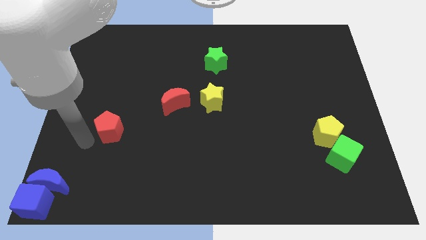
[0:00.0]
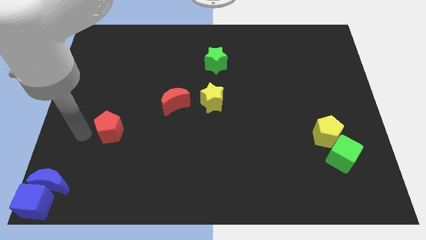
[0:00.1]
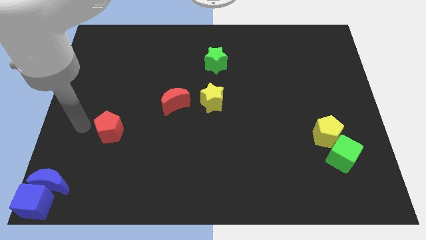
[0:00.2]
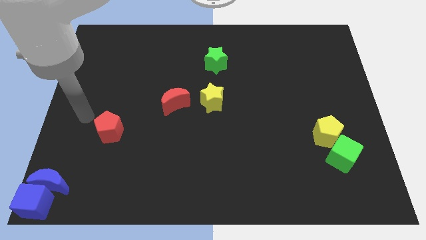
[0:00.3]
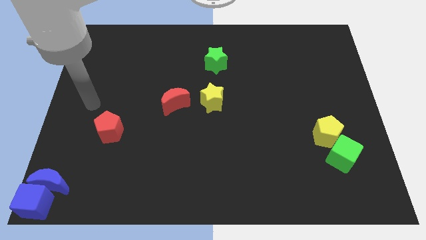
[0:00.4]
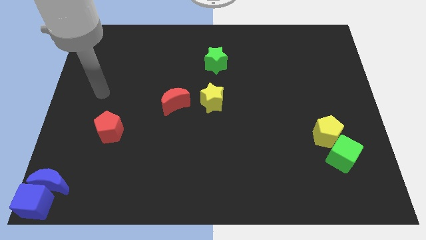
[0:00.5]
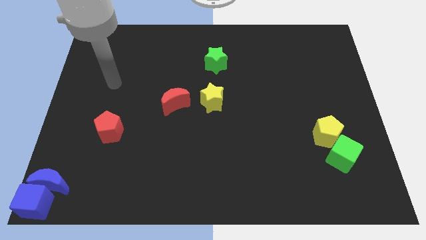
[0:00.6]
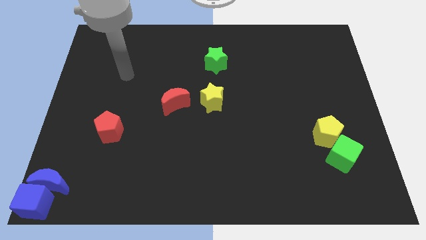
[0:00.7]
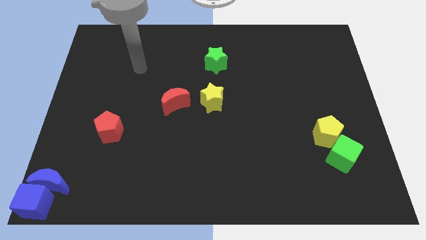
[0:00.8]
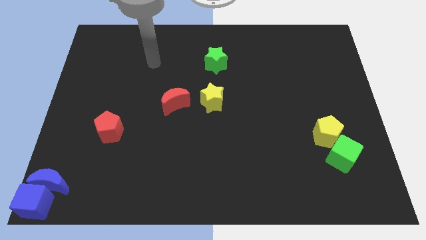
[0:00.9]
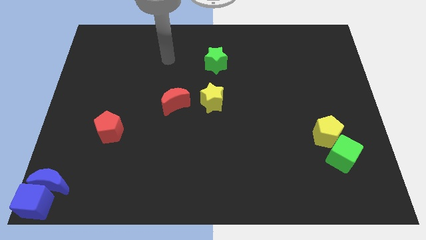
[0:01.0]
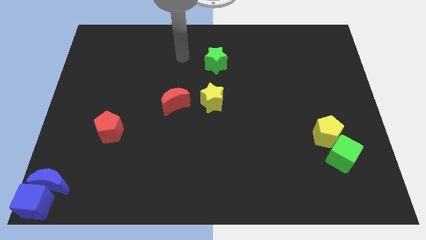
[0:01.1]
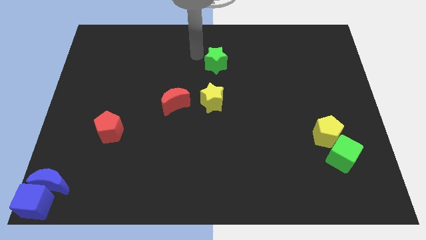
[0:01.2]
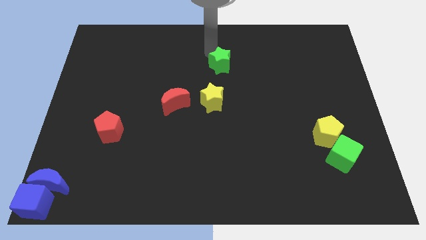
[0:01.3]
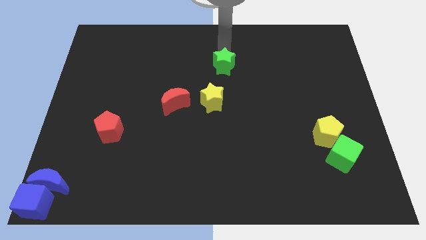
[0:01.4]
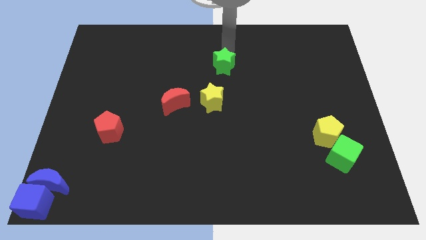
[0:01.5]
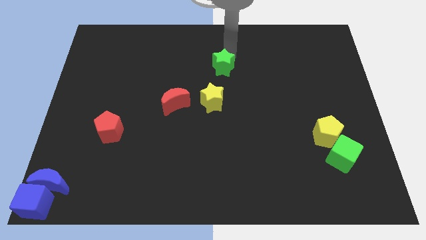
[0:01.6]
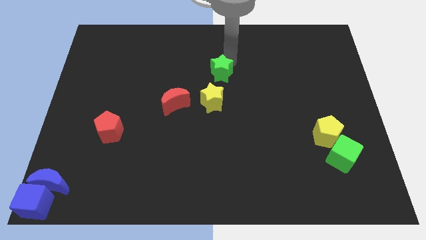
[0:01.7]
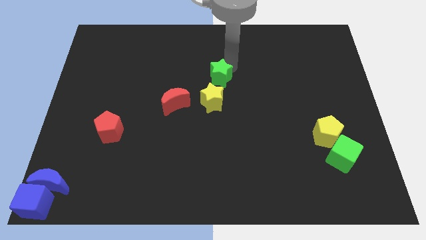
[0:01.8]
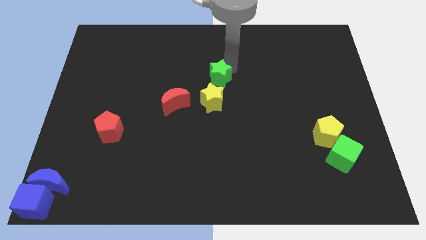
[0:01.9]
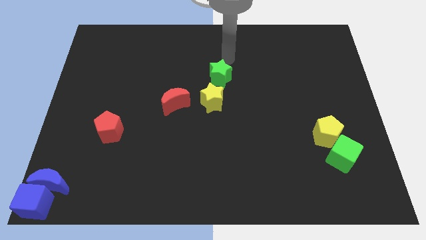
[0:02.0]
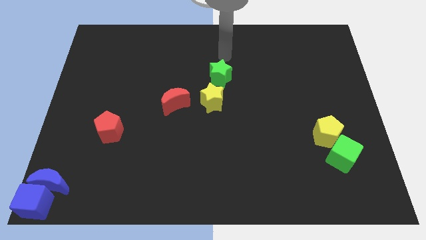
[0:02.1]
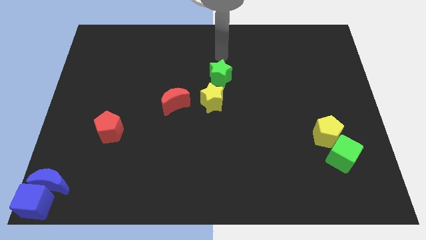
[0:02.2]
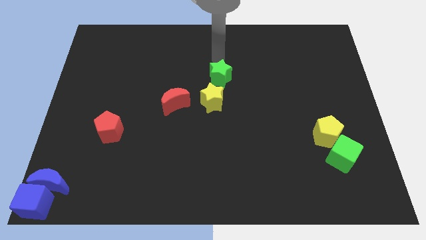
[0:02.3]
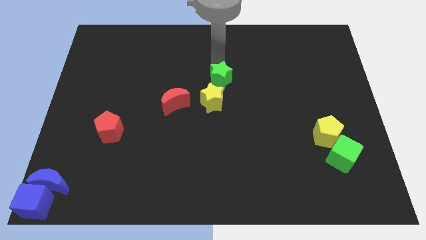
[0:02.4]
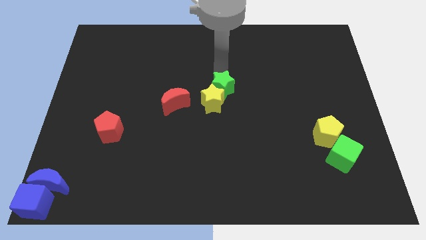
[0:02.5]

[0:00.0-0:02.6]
push the green star above into the yellow star

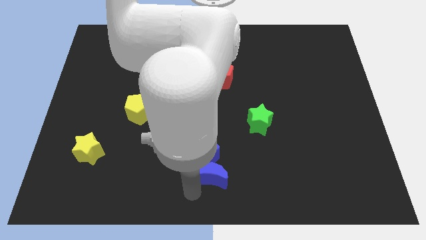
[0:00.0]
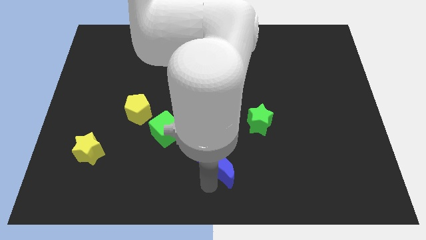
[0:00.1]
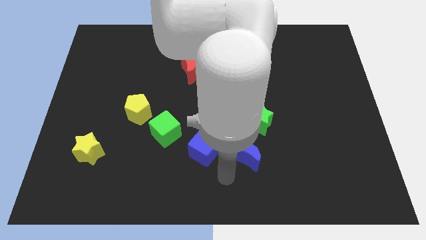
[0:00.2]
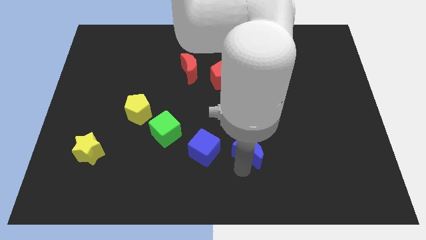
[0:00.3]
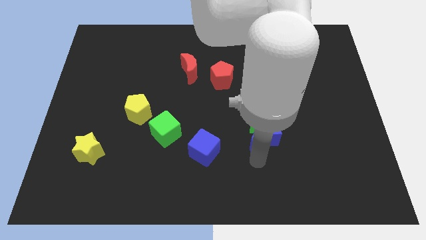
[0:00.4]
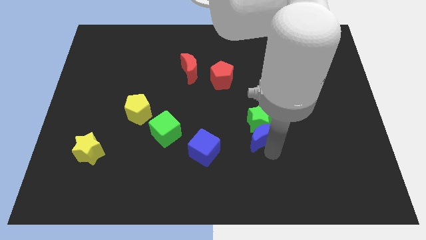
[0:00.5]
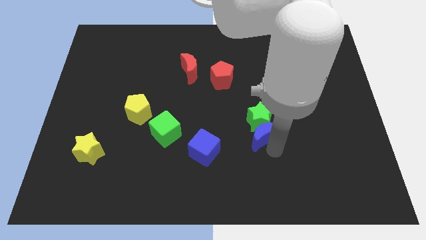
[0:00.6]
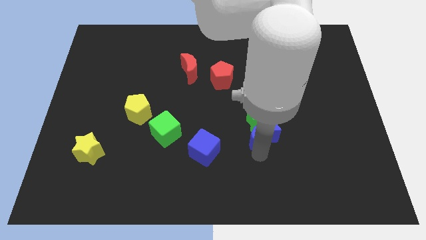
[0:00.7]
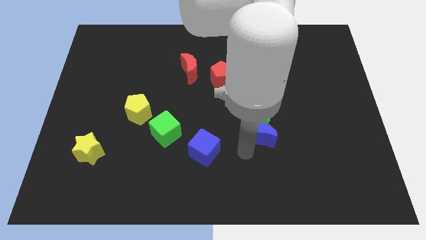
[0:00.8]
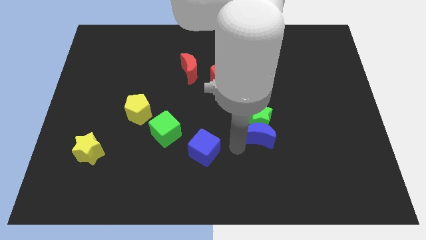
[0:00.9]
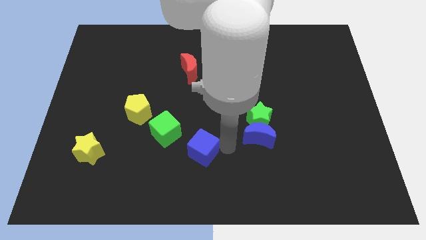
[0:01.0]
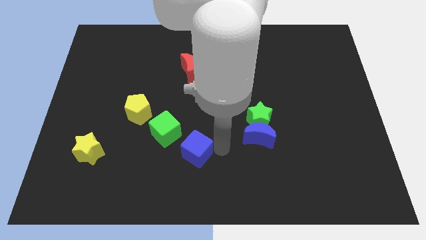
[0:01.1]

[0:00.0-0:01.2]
separate blue blocks from each other

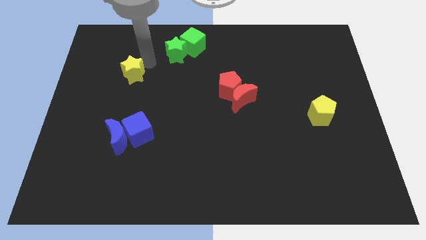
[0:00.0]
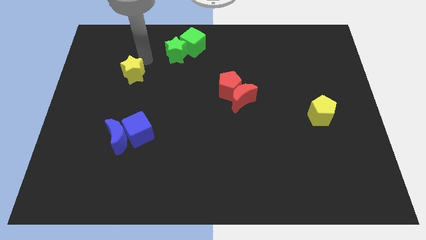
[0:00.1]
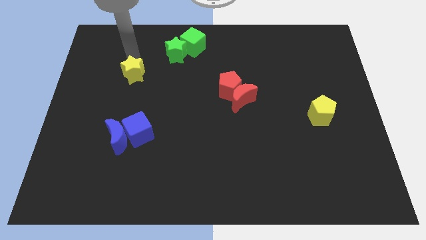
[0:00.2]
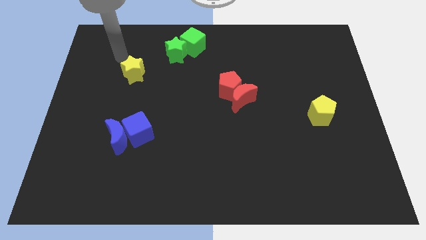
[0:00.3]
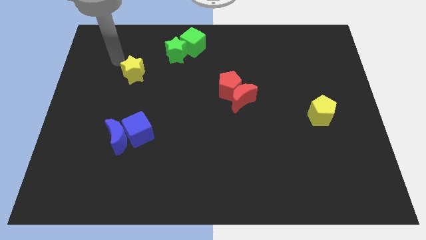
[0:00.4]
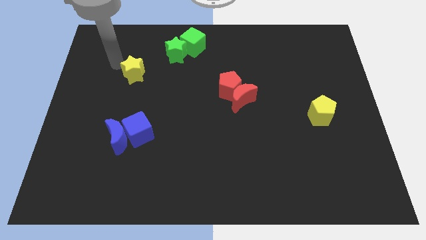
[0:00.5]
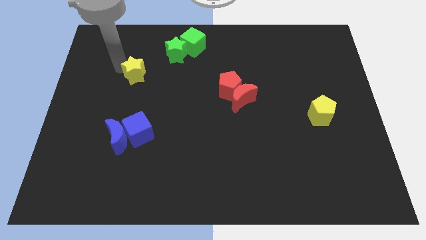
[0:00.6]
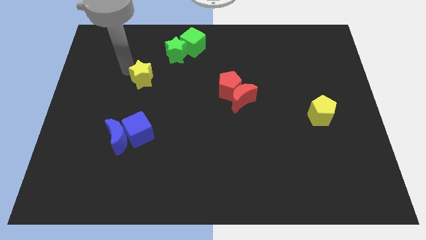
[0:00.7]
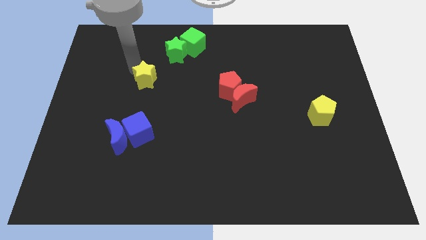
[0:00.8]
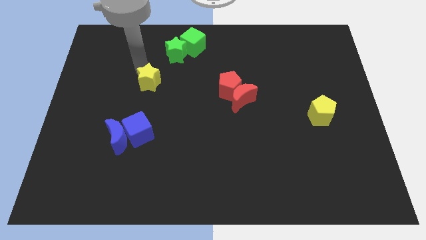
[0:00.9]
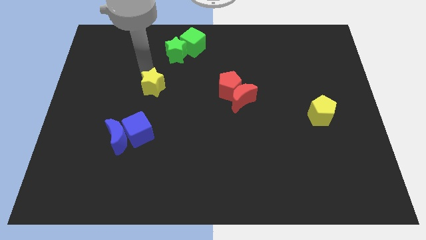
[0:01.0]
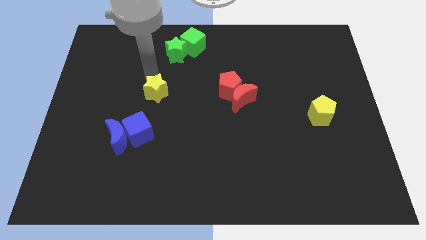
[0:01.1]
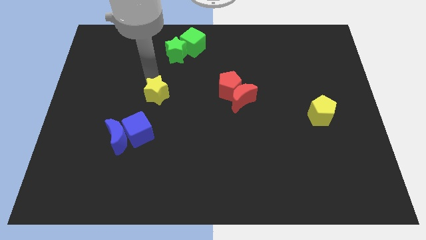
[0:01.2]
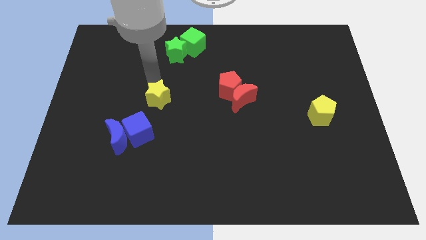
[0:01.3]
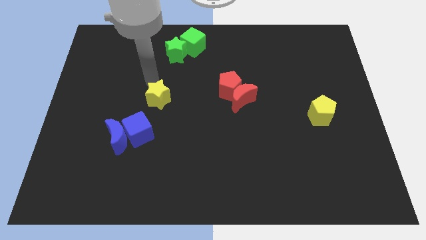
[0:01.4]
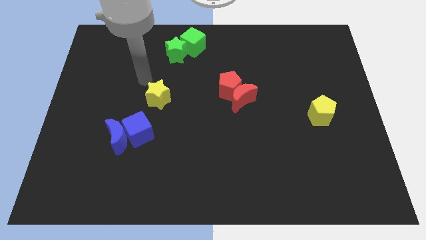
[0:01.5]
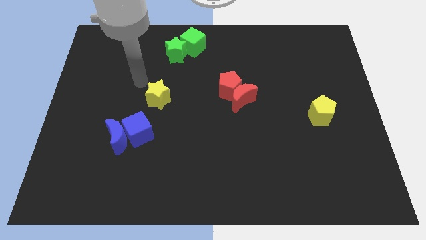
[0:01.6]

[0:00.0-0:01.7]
put the yellow star diagonally on the top right of the blue cube

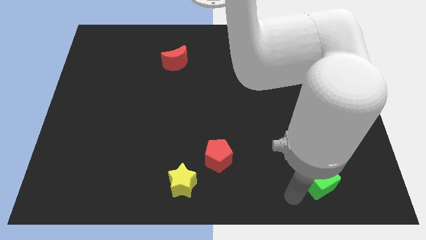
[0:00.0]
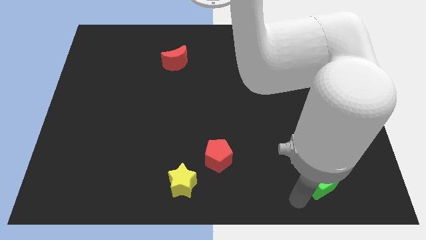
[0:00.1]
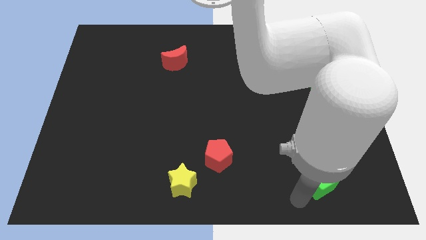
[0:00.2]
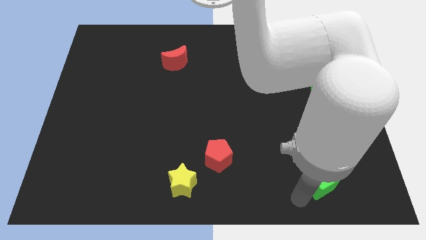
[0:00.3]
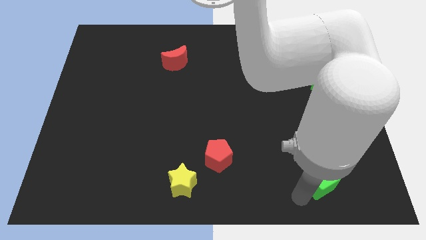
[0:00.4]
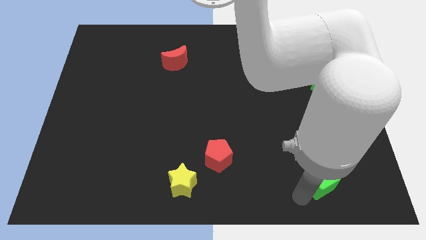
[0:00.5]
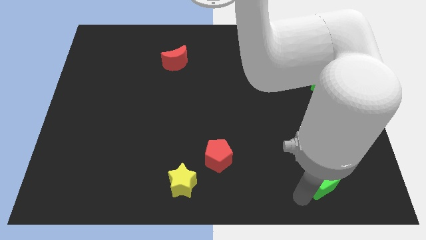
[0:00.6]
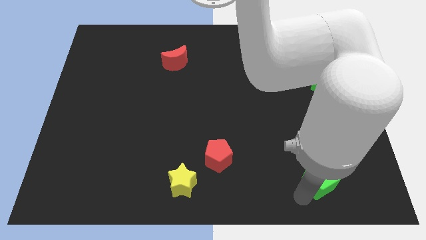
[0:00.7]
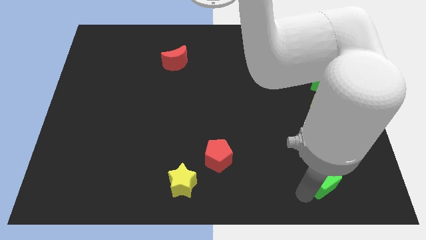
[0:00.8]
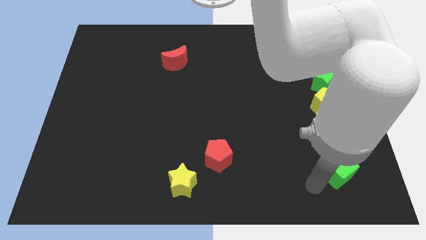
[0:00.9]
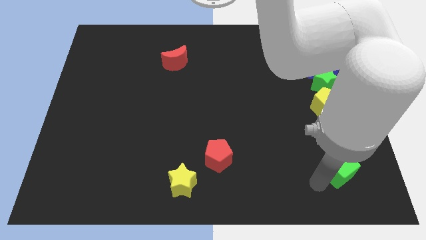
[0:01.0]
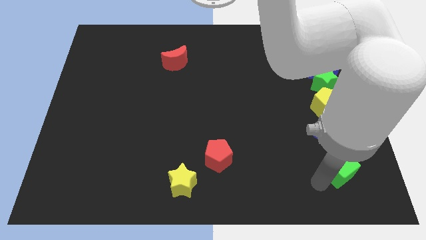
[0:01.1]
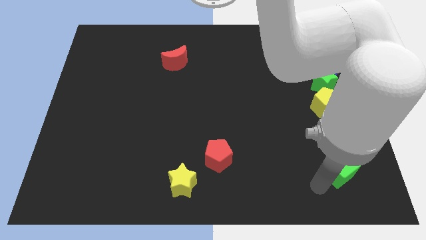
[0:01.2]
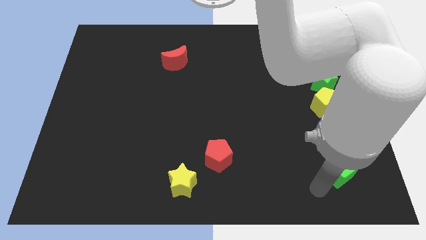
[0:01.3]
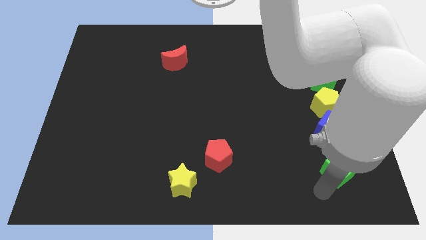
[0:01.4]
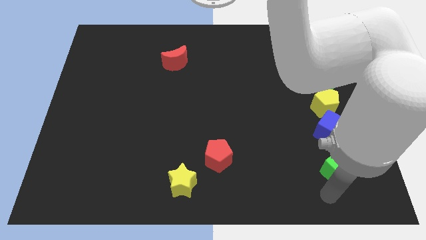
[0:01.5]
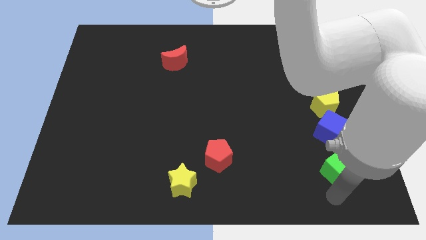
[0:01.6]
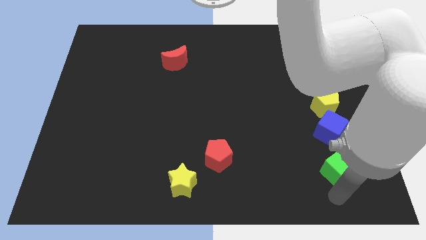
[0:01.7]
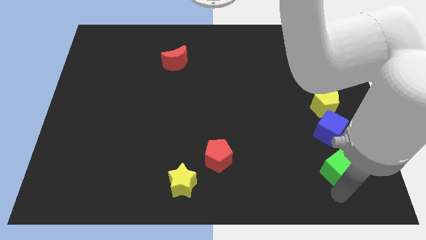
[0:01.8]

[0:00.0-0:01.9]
place the green cube vertically at the bottom of the blue cube

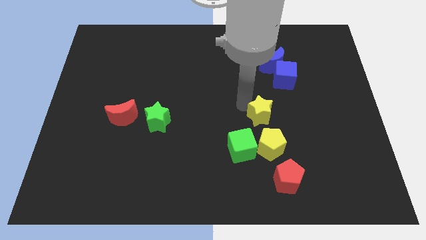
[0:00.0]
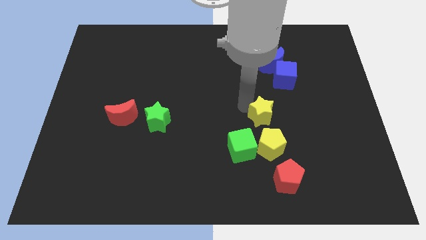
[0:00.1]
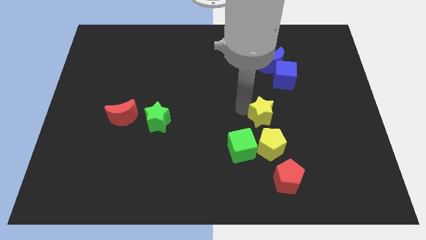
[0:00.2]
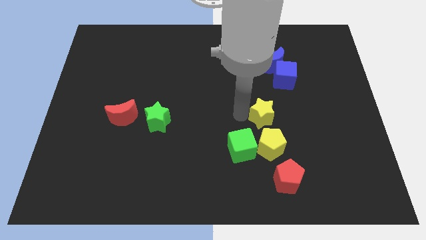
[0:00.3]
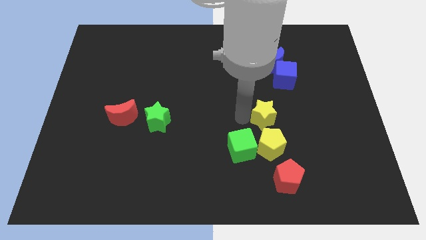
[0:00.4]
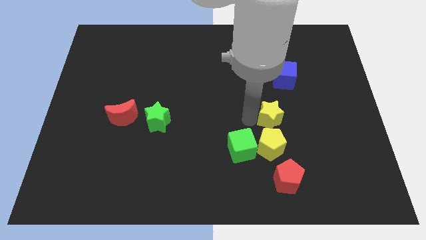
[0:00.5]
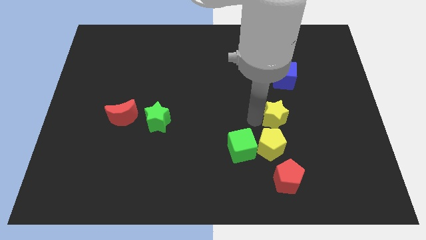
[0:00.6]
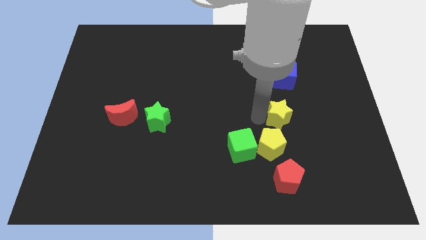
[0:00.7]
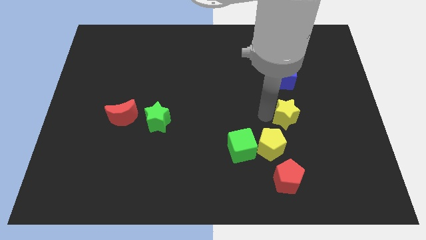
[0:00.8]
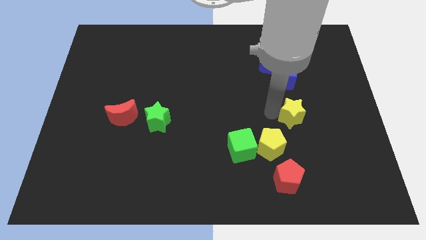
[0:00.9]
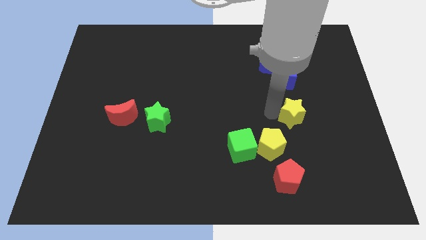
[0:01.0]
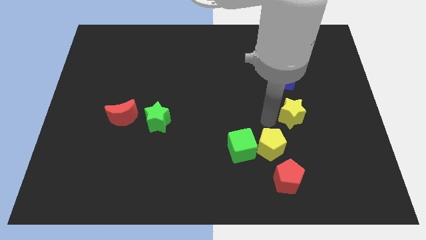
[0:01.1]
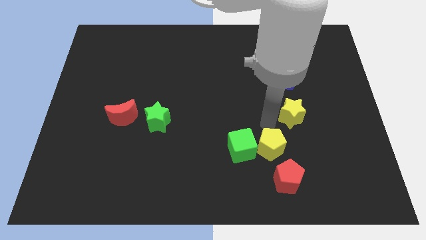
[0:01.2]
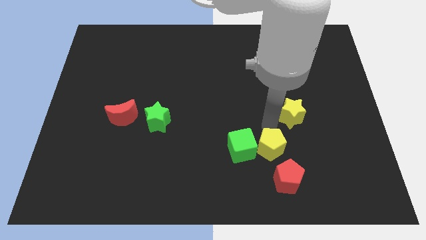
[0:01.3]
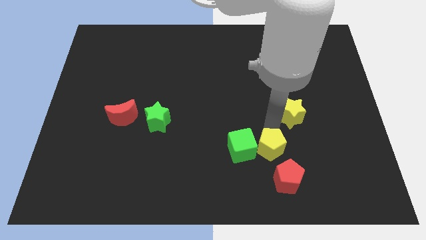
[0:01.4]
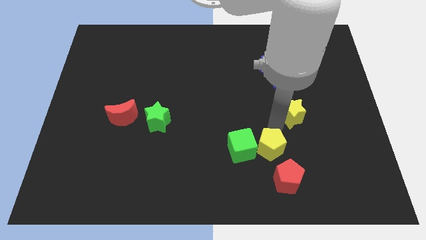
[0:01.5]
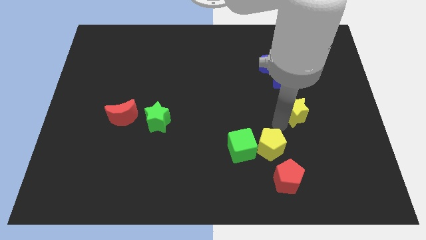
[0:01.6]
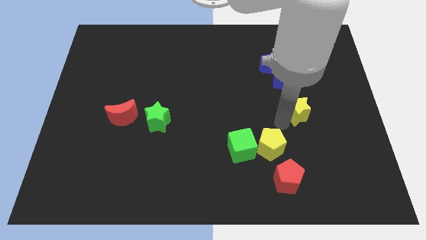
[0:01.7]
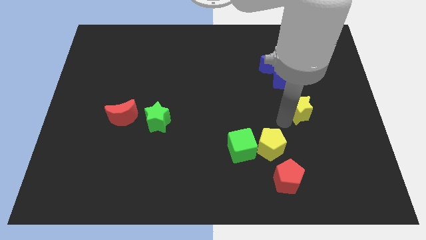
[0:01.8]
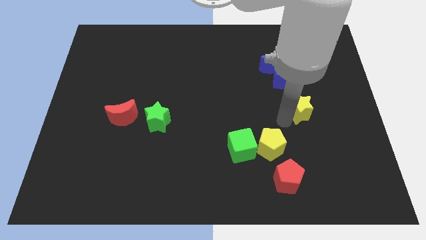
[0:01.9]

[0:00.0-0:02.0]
move the yellow star towards right side of the board
